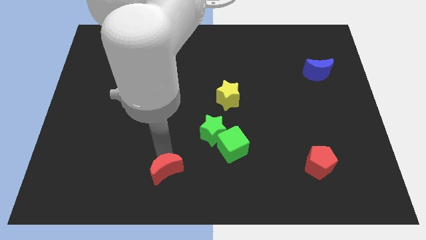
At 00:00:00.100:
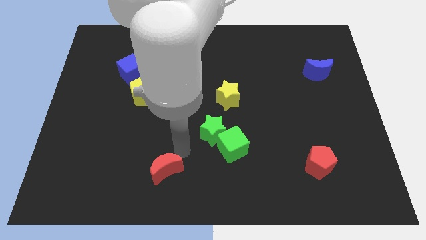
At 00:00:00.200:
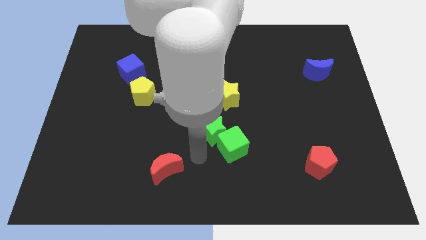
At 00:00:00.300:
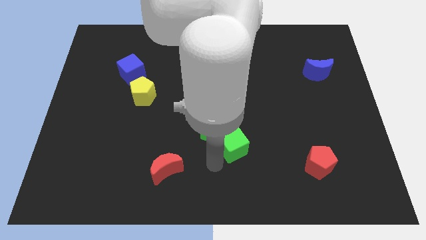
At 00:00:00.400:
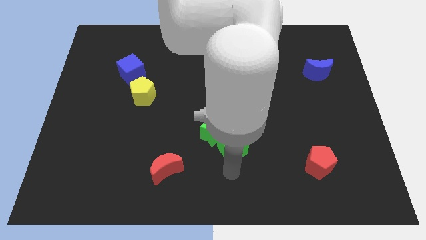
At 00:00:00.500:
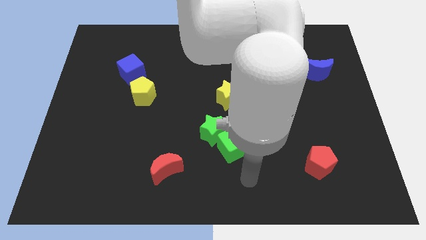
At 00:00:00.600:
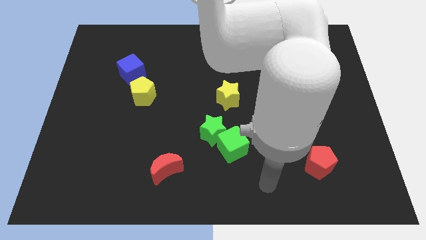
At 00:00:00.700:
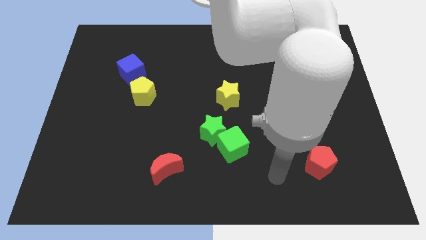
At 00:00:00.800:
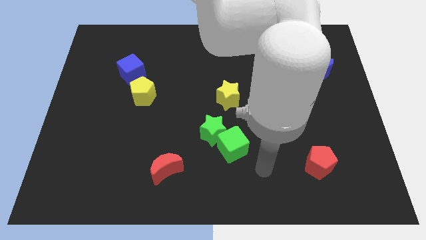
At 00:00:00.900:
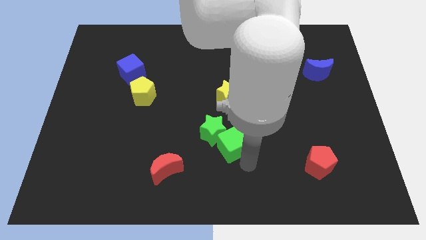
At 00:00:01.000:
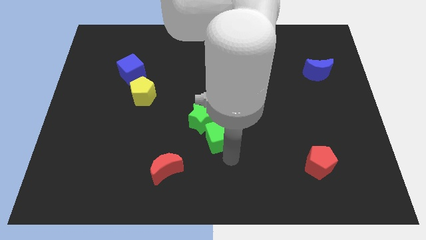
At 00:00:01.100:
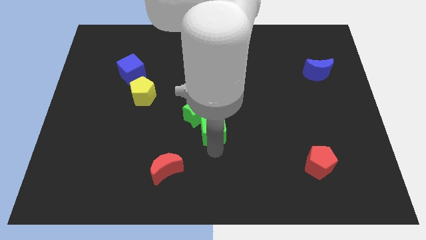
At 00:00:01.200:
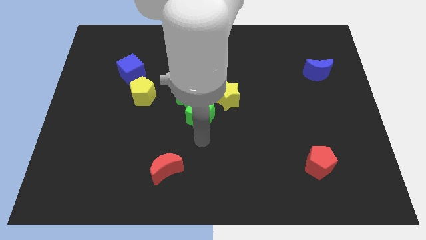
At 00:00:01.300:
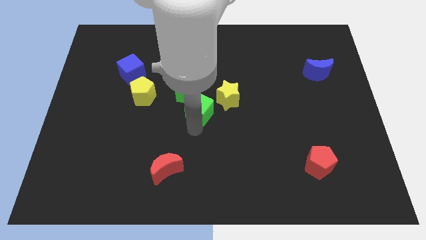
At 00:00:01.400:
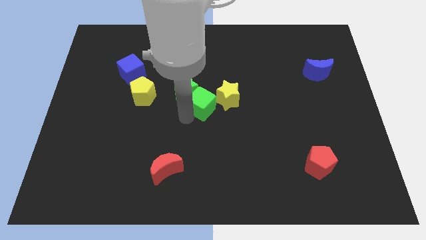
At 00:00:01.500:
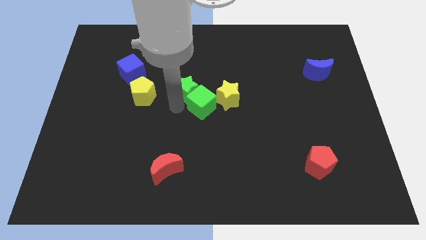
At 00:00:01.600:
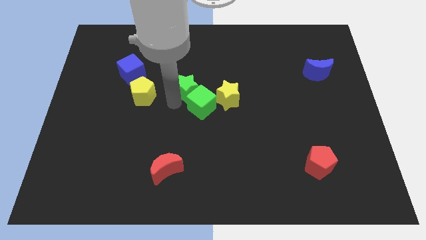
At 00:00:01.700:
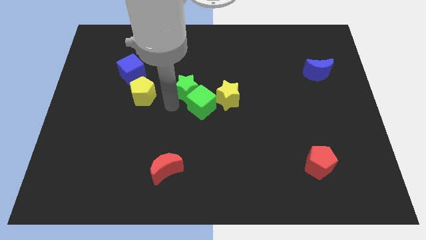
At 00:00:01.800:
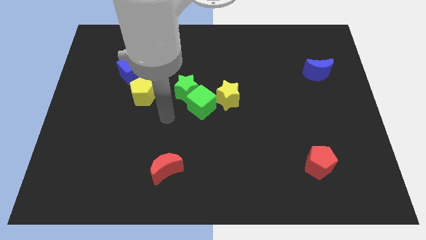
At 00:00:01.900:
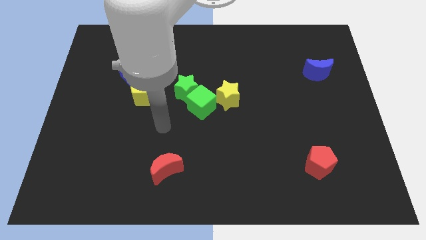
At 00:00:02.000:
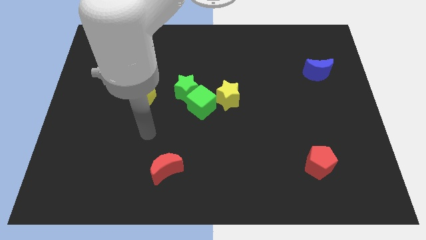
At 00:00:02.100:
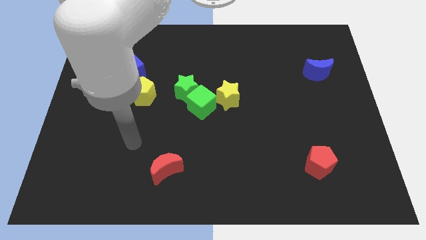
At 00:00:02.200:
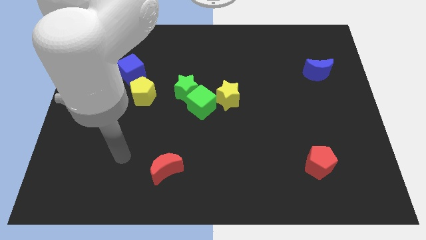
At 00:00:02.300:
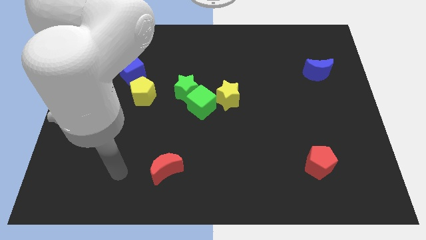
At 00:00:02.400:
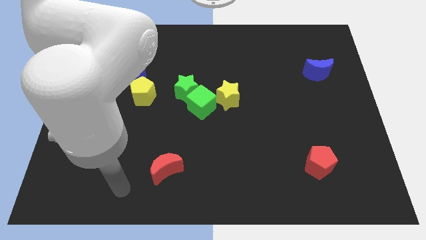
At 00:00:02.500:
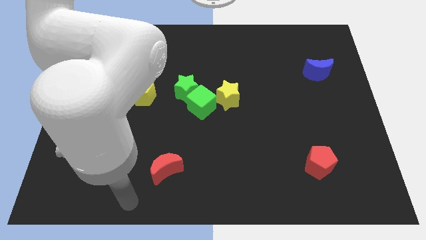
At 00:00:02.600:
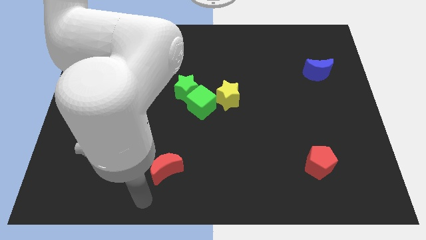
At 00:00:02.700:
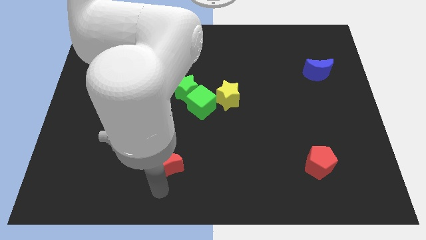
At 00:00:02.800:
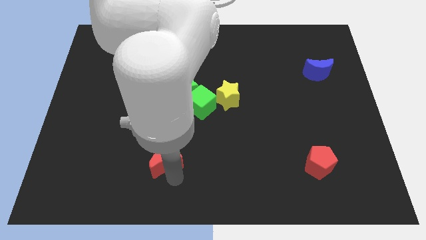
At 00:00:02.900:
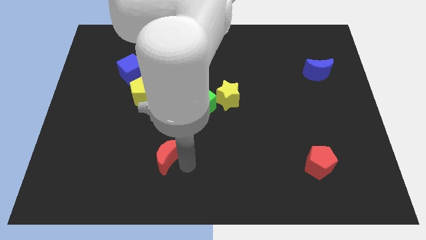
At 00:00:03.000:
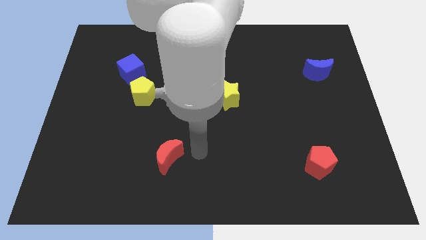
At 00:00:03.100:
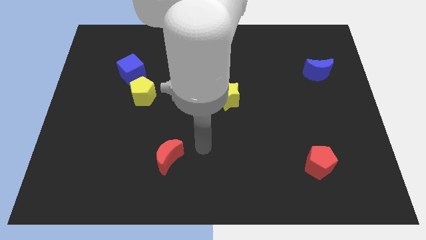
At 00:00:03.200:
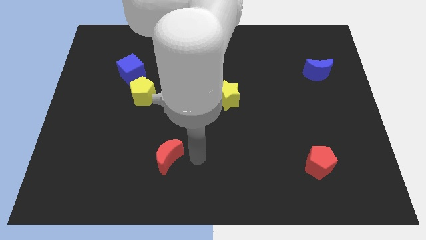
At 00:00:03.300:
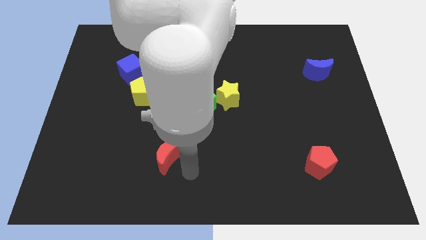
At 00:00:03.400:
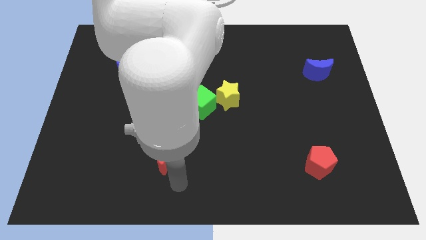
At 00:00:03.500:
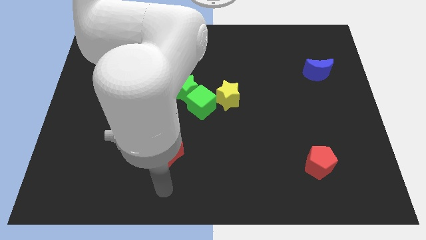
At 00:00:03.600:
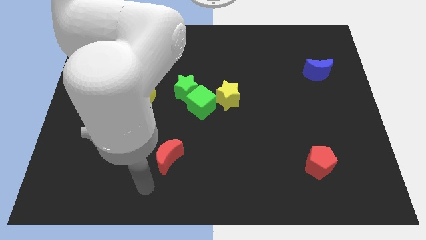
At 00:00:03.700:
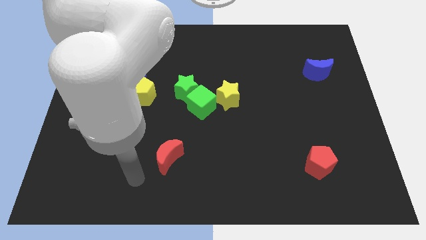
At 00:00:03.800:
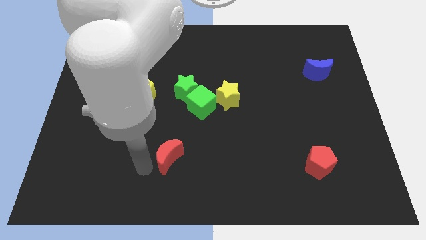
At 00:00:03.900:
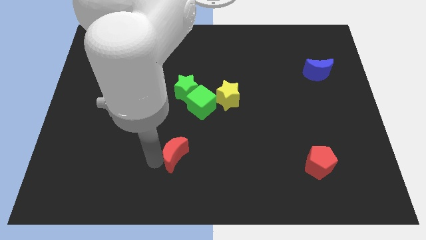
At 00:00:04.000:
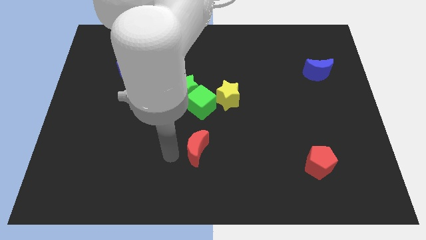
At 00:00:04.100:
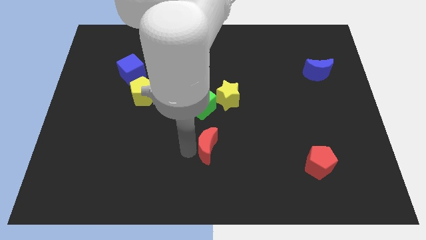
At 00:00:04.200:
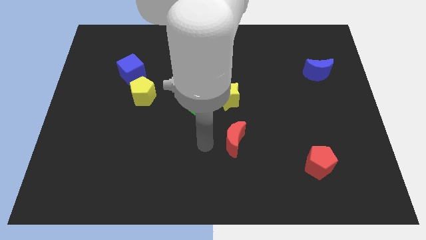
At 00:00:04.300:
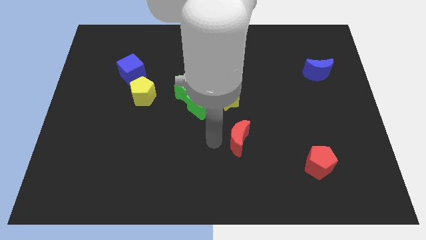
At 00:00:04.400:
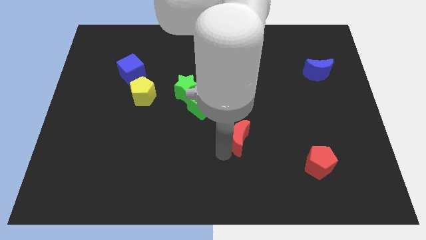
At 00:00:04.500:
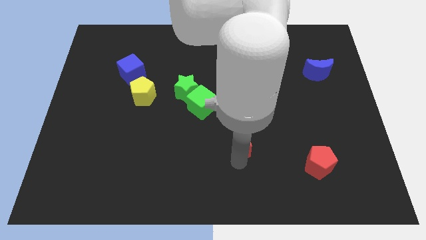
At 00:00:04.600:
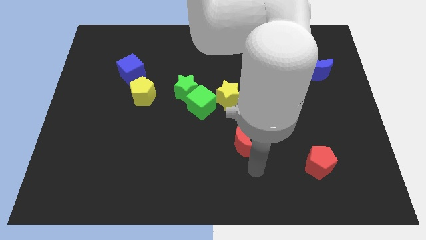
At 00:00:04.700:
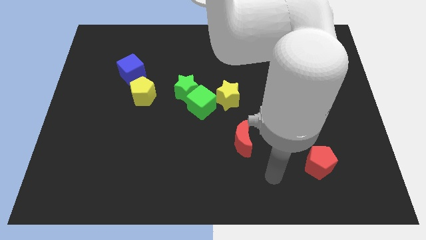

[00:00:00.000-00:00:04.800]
slide the red moon towards the bottom side of the yellow star

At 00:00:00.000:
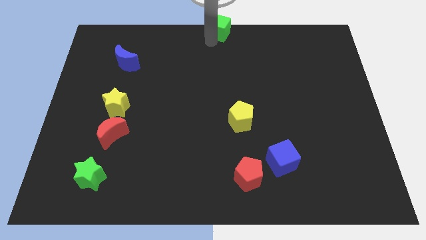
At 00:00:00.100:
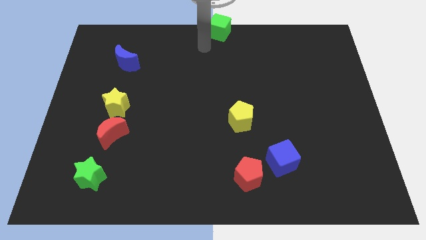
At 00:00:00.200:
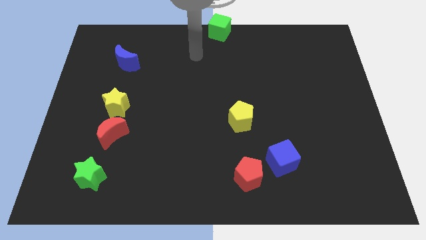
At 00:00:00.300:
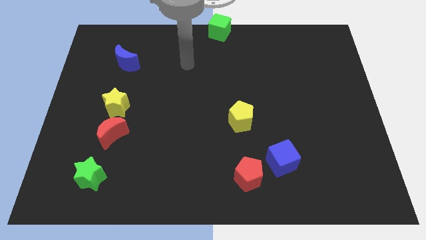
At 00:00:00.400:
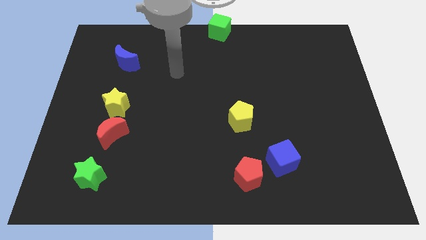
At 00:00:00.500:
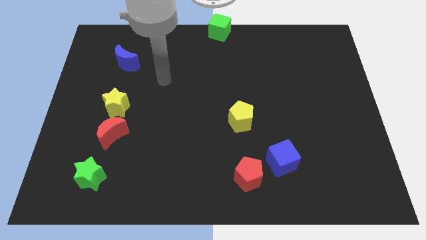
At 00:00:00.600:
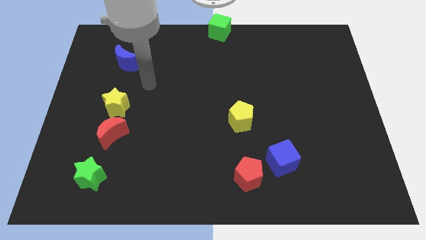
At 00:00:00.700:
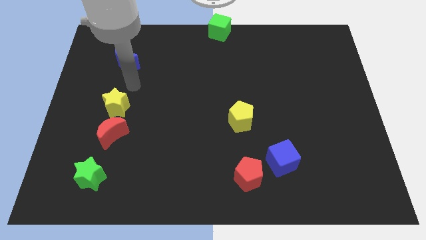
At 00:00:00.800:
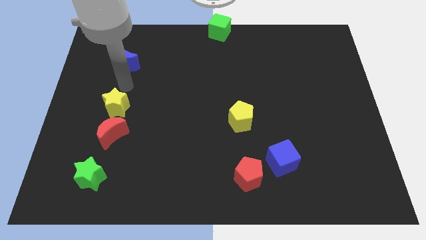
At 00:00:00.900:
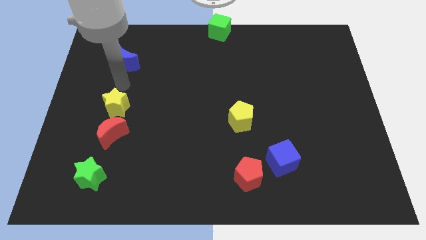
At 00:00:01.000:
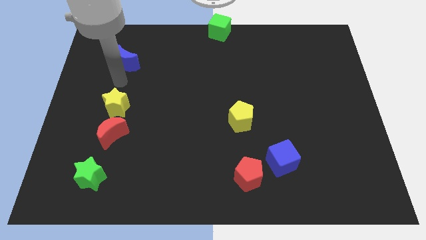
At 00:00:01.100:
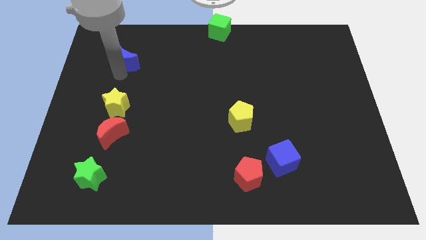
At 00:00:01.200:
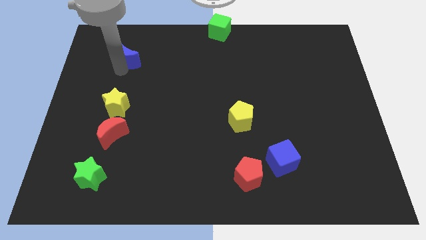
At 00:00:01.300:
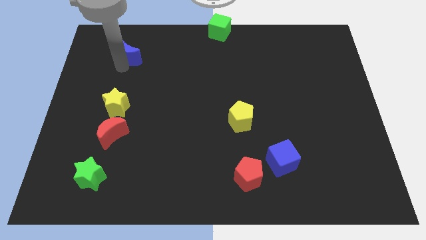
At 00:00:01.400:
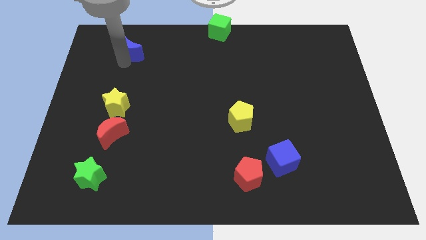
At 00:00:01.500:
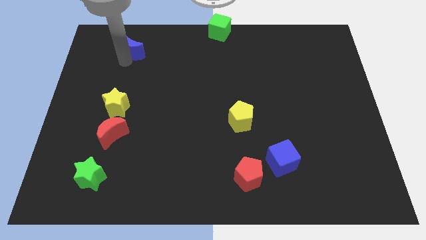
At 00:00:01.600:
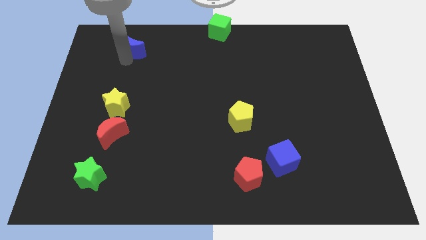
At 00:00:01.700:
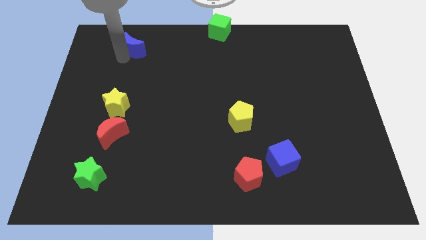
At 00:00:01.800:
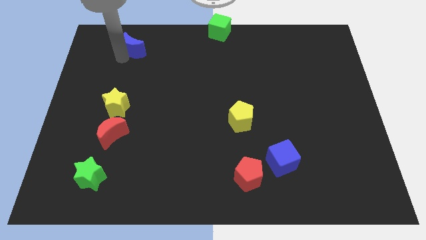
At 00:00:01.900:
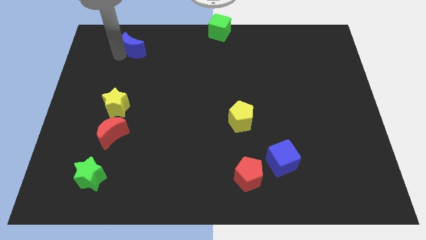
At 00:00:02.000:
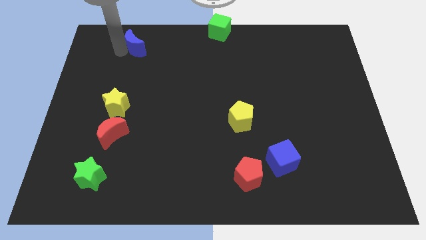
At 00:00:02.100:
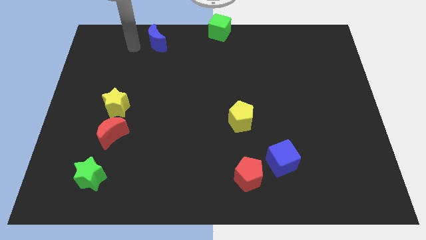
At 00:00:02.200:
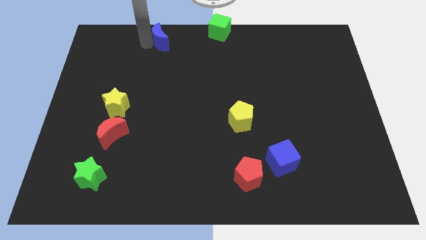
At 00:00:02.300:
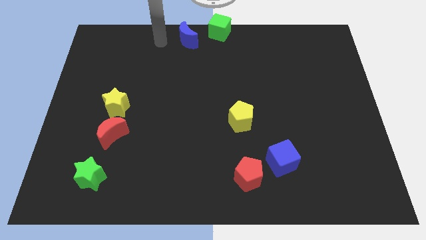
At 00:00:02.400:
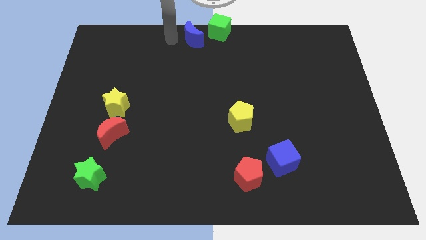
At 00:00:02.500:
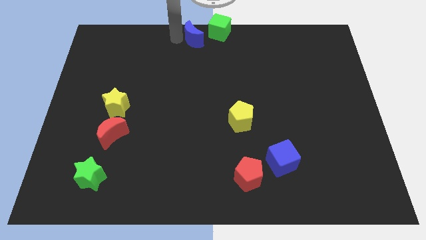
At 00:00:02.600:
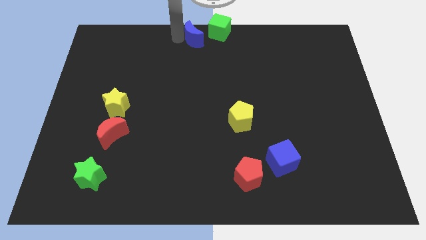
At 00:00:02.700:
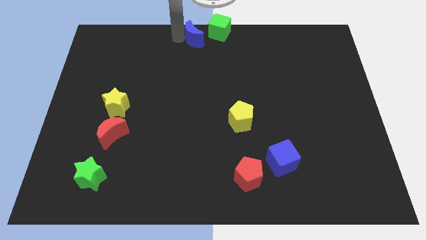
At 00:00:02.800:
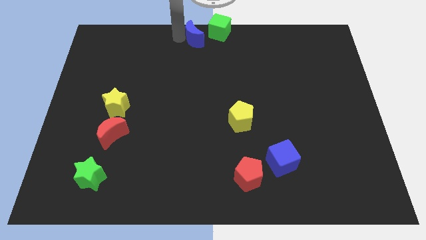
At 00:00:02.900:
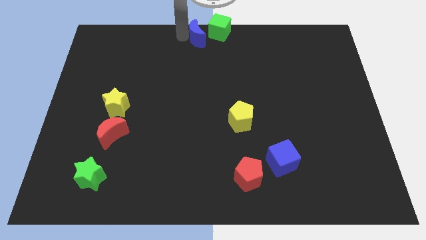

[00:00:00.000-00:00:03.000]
place the blue moon at the bottom left side of green cube

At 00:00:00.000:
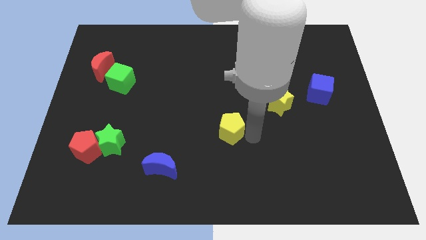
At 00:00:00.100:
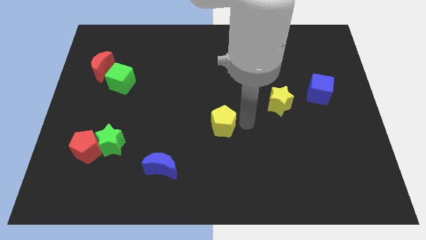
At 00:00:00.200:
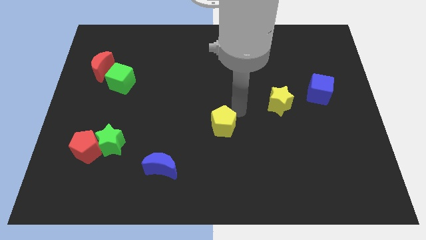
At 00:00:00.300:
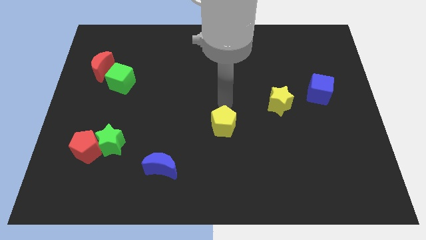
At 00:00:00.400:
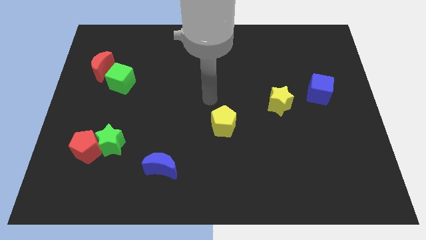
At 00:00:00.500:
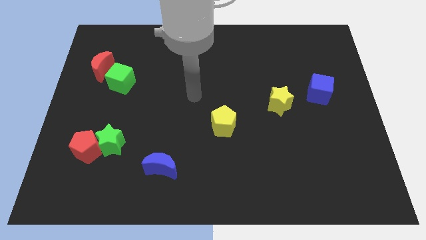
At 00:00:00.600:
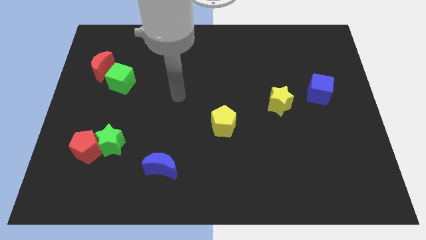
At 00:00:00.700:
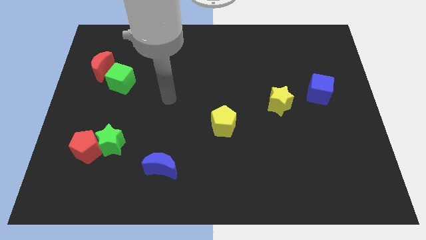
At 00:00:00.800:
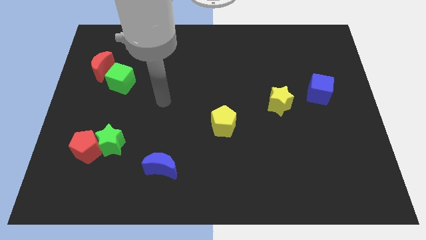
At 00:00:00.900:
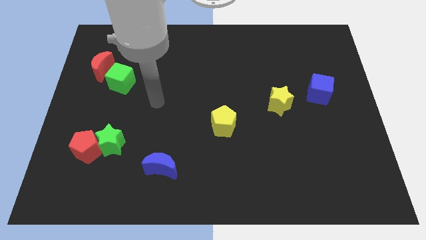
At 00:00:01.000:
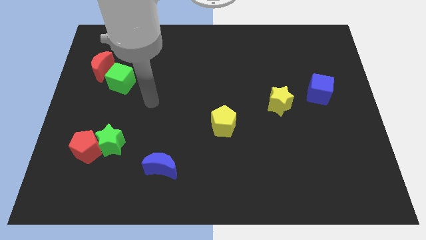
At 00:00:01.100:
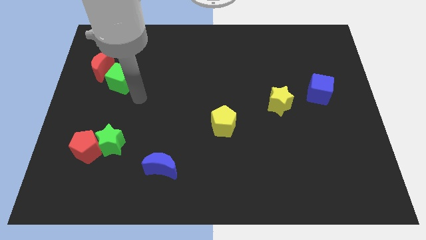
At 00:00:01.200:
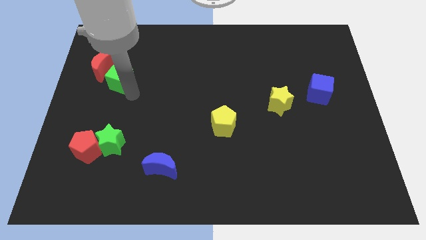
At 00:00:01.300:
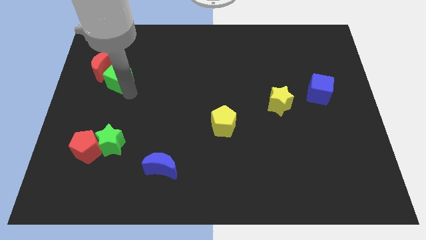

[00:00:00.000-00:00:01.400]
touch the bottom right side of the green cube
